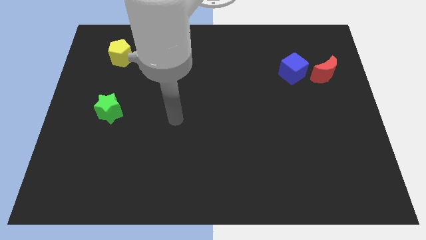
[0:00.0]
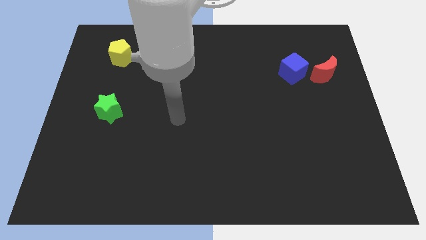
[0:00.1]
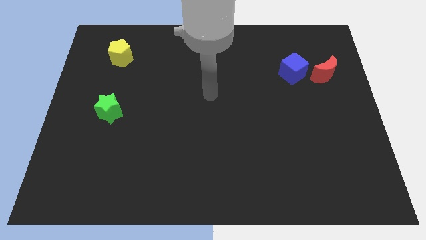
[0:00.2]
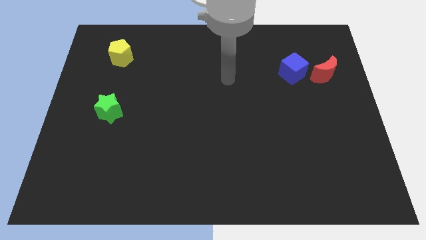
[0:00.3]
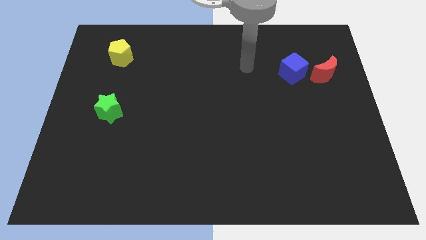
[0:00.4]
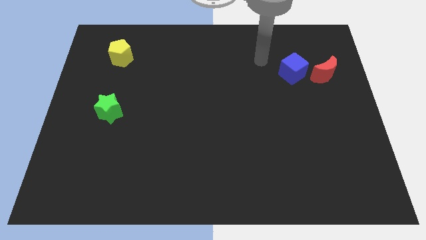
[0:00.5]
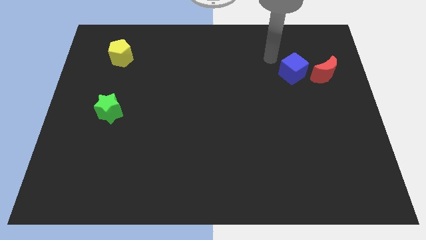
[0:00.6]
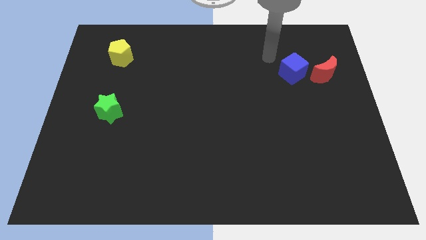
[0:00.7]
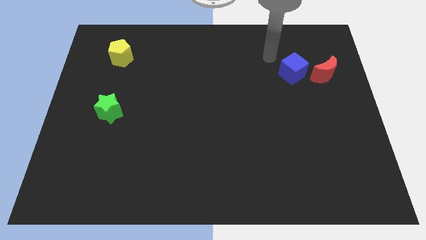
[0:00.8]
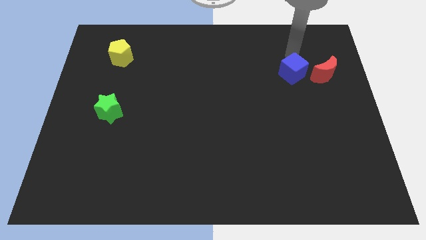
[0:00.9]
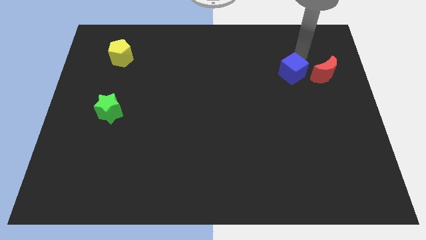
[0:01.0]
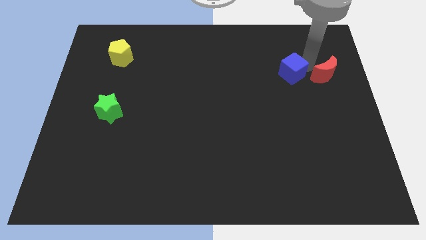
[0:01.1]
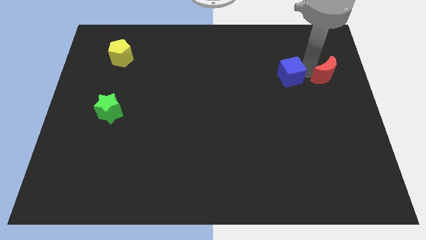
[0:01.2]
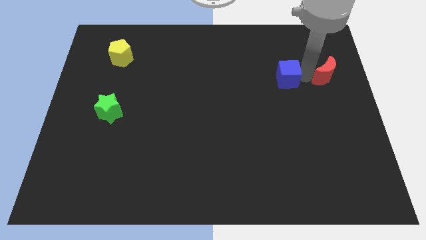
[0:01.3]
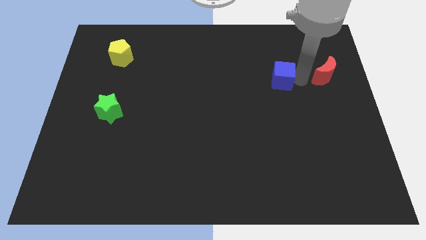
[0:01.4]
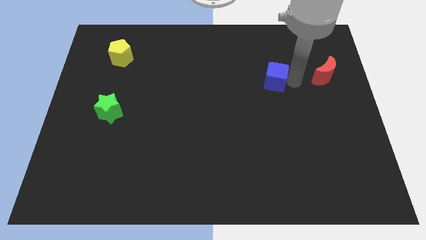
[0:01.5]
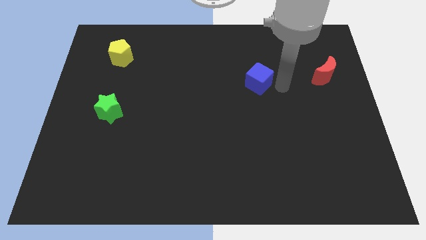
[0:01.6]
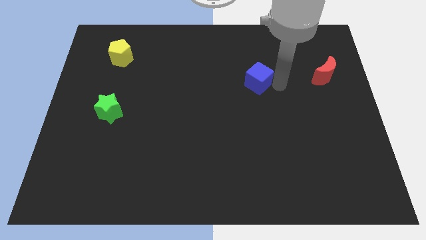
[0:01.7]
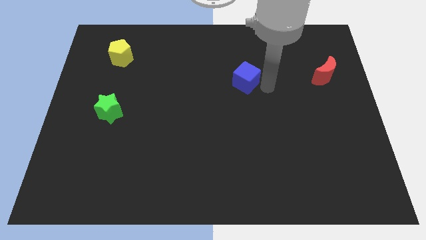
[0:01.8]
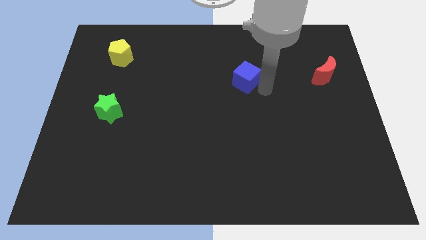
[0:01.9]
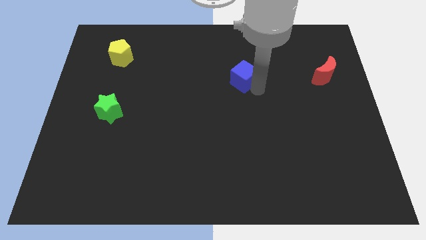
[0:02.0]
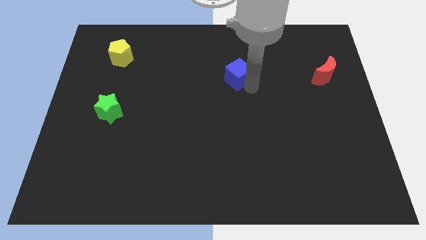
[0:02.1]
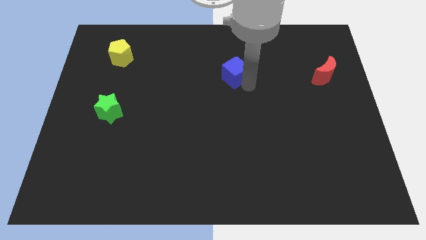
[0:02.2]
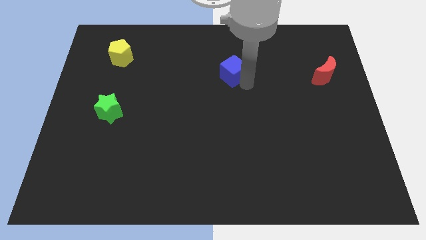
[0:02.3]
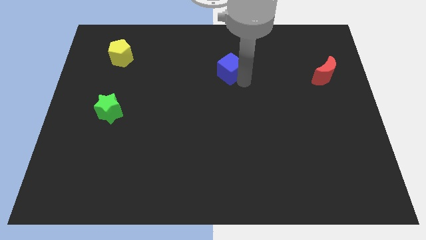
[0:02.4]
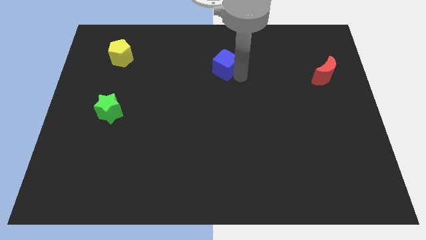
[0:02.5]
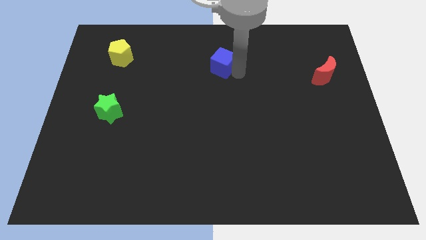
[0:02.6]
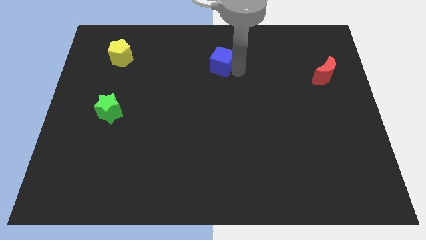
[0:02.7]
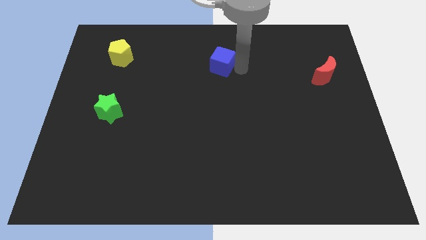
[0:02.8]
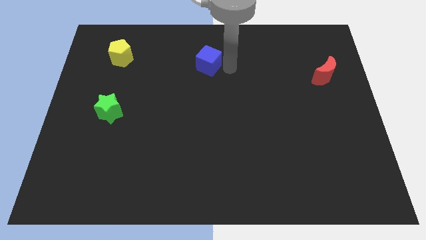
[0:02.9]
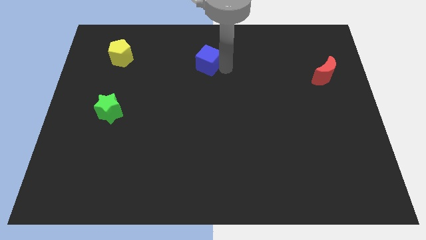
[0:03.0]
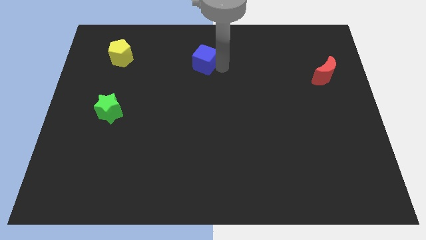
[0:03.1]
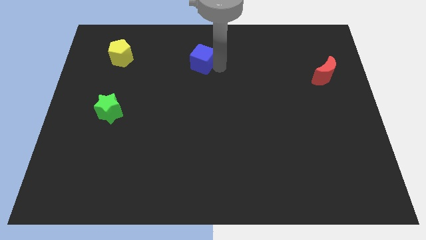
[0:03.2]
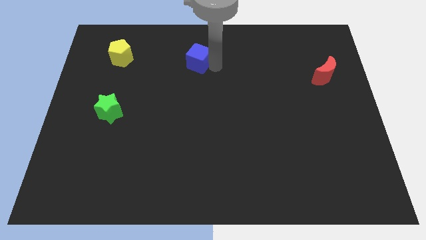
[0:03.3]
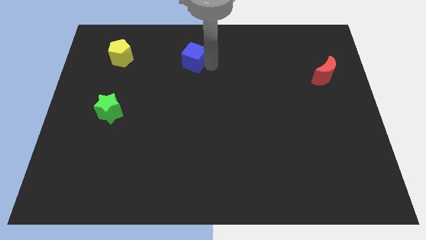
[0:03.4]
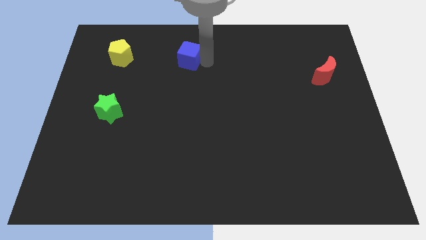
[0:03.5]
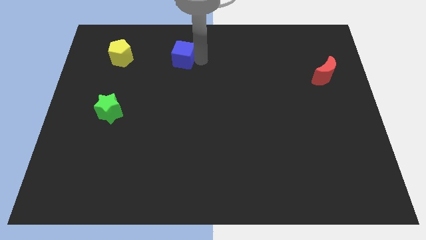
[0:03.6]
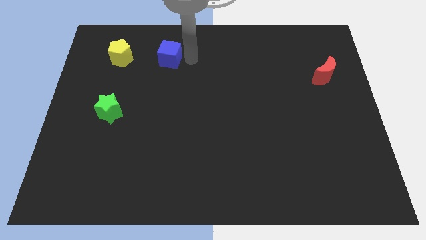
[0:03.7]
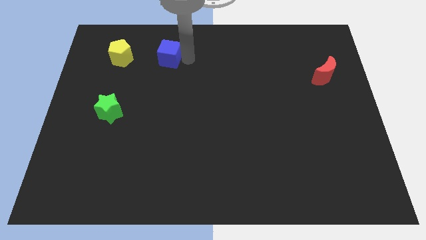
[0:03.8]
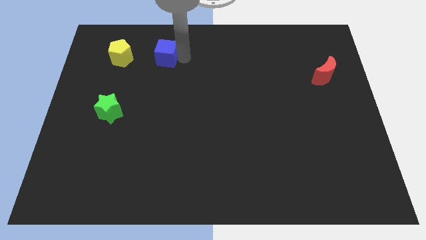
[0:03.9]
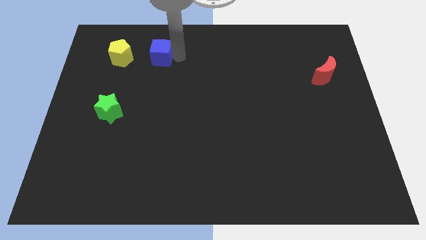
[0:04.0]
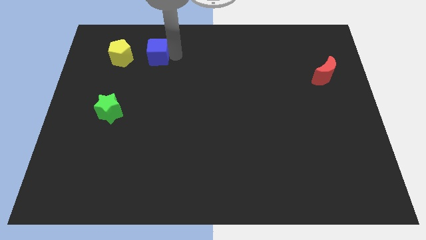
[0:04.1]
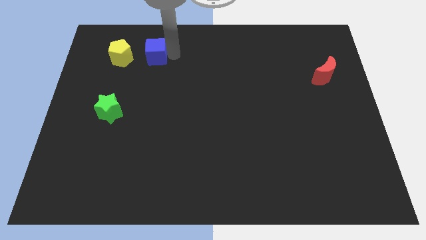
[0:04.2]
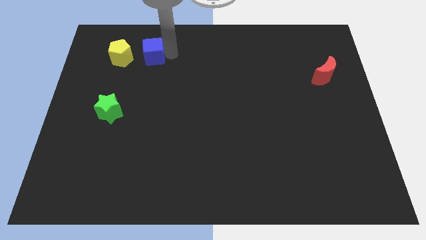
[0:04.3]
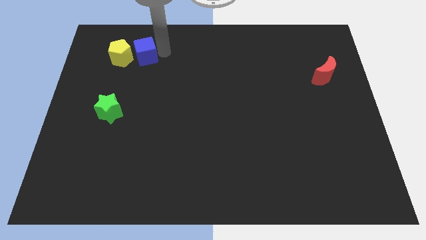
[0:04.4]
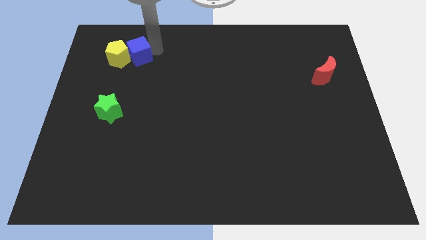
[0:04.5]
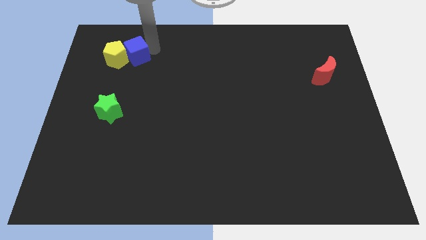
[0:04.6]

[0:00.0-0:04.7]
put the blue cube towards the yellow block

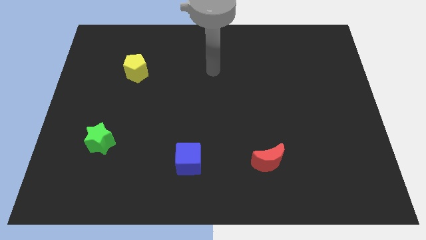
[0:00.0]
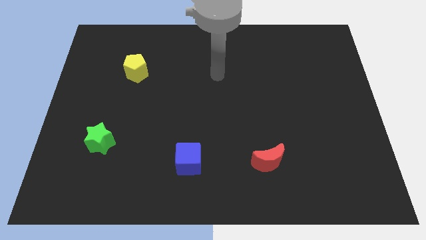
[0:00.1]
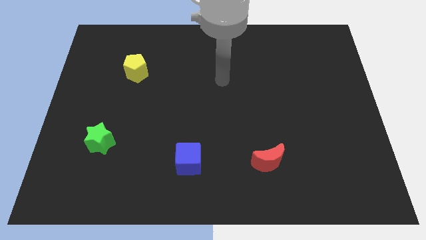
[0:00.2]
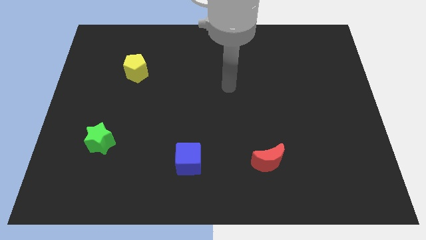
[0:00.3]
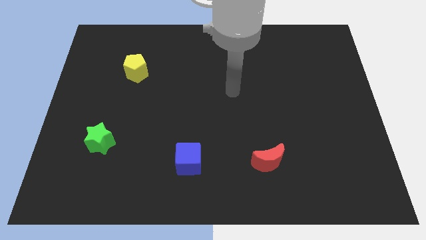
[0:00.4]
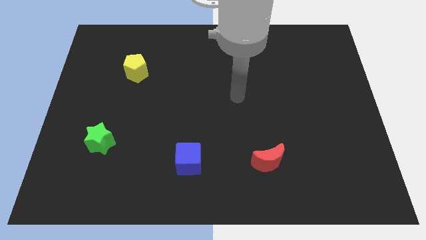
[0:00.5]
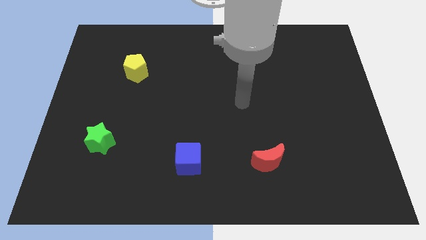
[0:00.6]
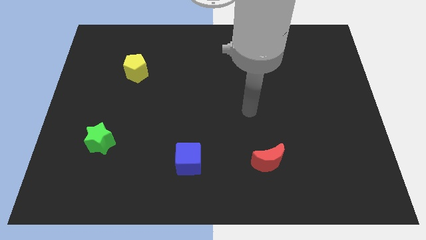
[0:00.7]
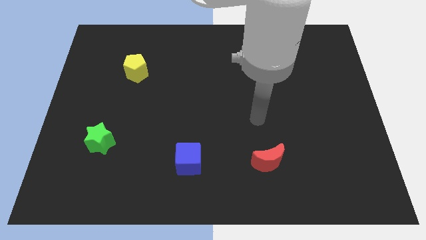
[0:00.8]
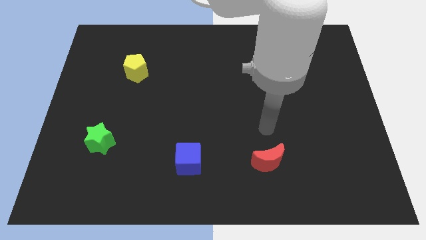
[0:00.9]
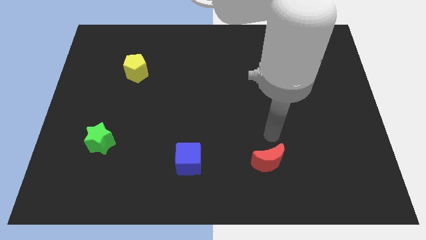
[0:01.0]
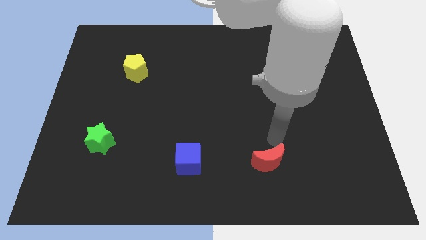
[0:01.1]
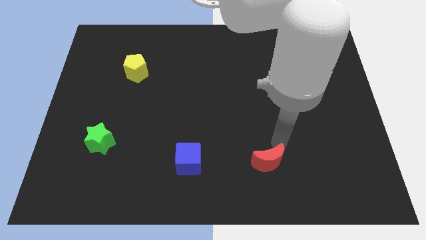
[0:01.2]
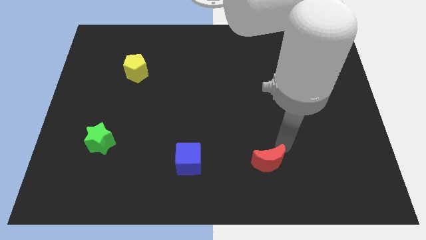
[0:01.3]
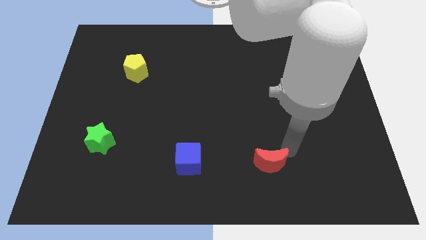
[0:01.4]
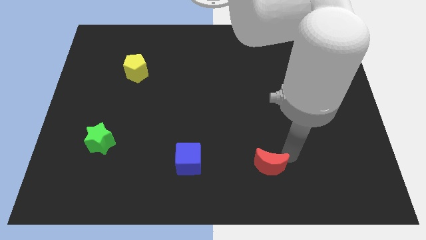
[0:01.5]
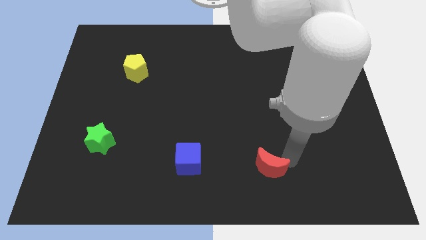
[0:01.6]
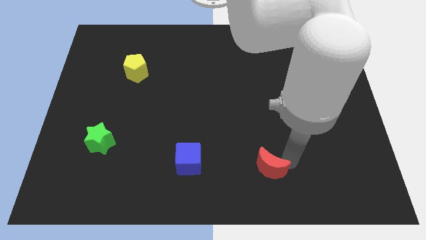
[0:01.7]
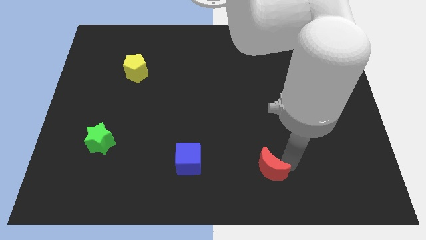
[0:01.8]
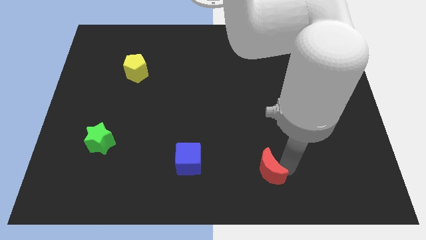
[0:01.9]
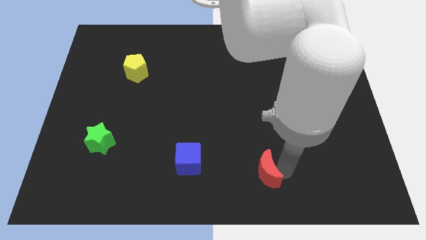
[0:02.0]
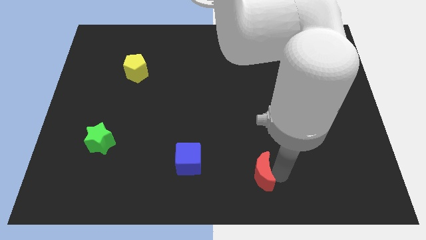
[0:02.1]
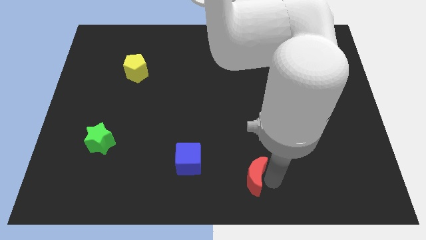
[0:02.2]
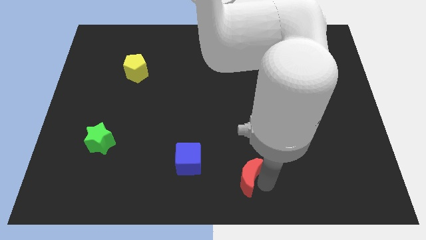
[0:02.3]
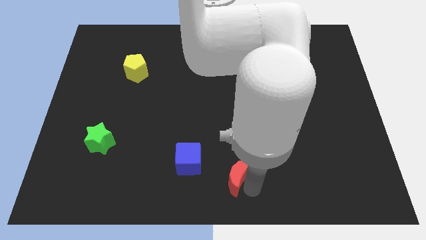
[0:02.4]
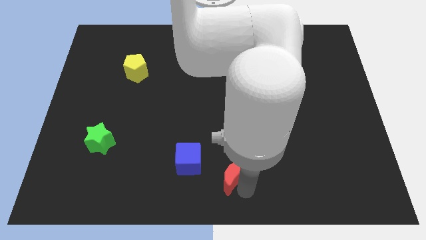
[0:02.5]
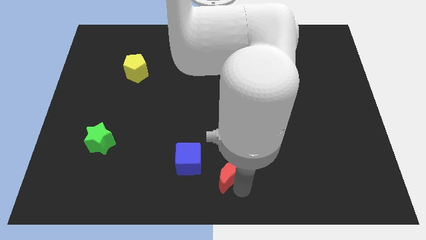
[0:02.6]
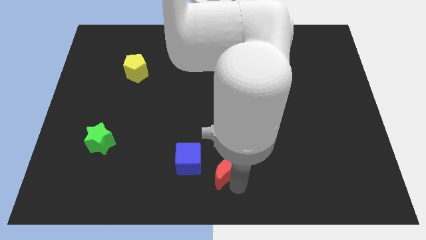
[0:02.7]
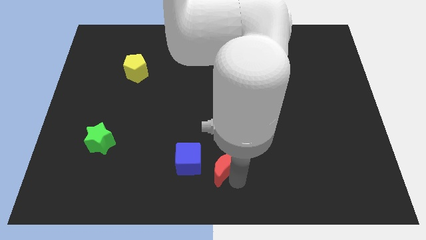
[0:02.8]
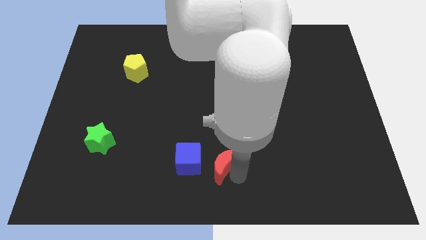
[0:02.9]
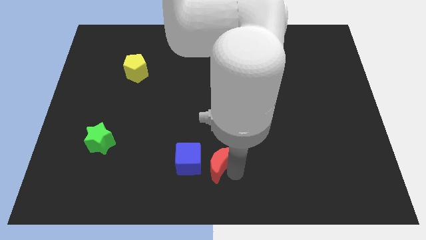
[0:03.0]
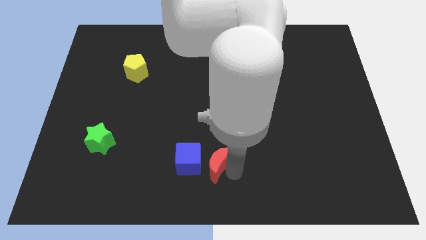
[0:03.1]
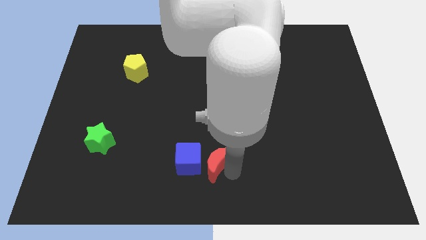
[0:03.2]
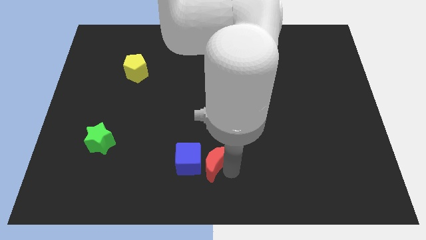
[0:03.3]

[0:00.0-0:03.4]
slide the red moon towards the blue block

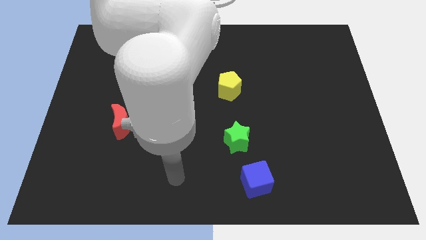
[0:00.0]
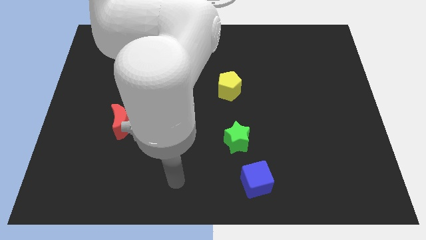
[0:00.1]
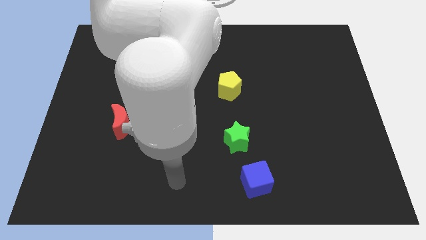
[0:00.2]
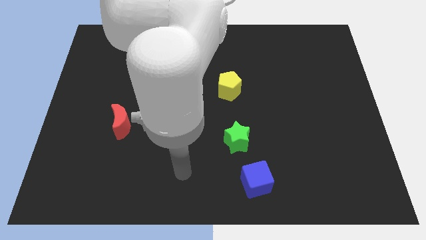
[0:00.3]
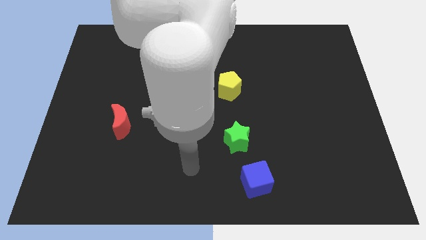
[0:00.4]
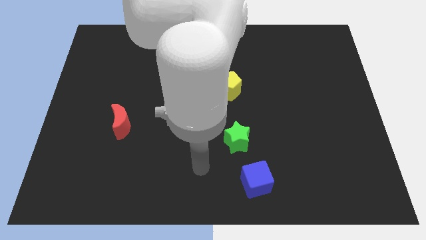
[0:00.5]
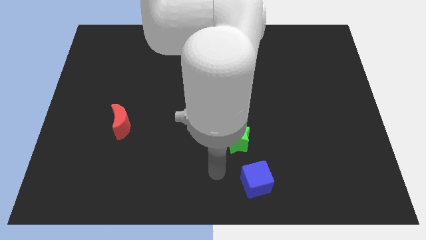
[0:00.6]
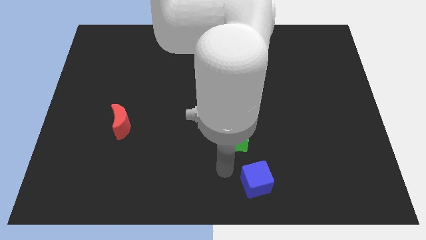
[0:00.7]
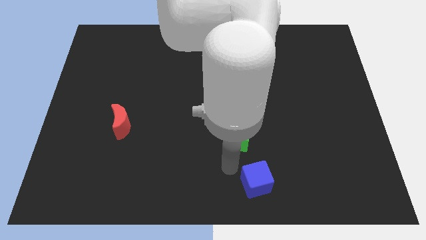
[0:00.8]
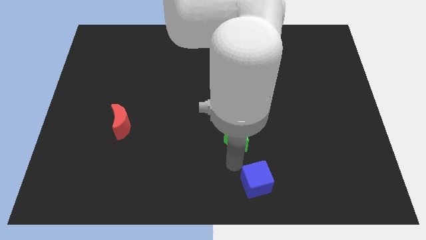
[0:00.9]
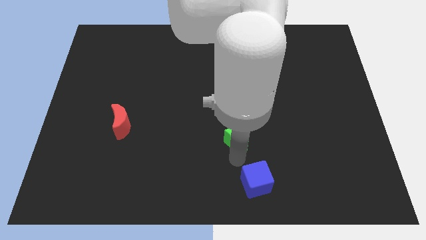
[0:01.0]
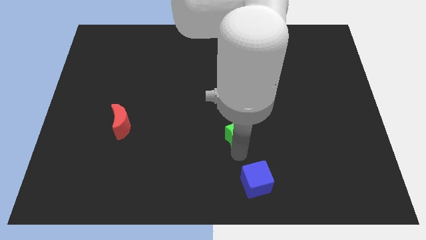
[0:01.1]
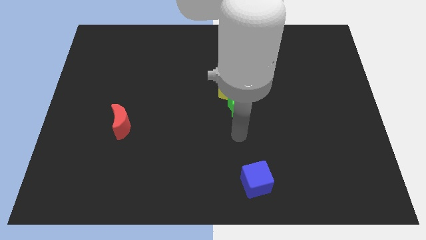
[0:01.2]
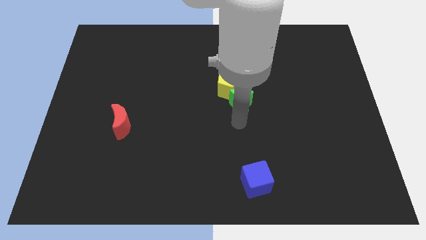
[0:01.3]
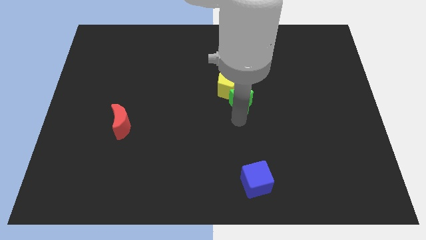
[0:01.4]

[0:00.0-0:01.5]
push the green block to the pentagon
